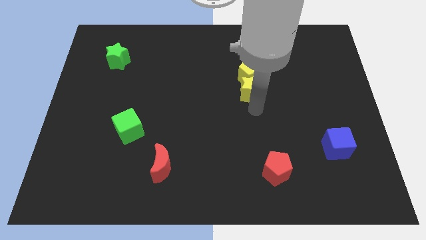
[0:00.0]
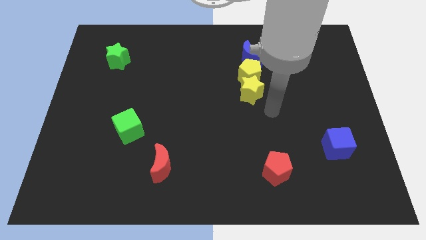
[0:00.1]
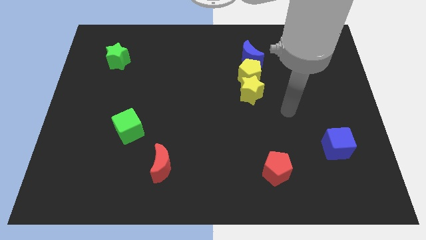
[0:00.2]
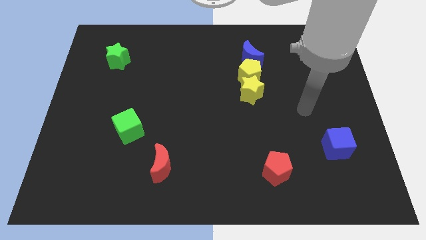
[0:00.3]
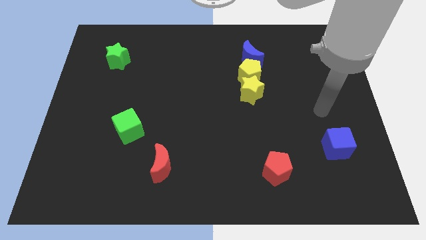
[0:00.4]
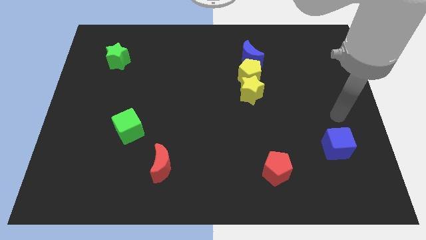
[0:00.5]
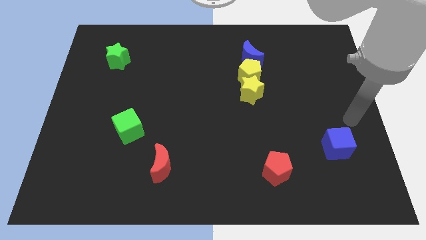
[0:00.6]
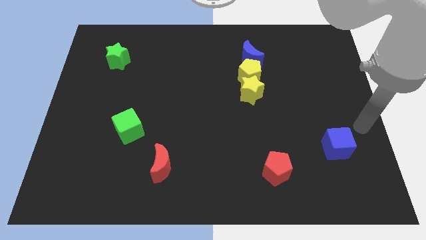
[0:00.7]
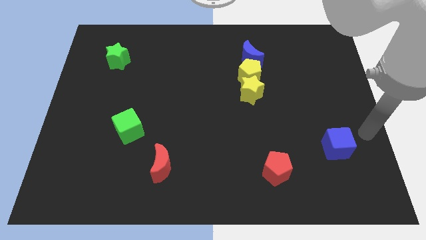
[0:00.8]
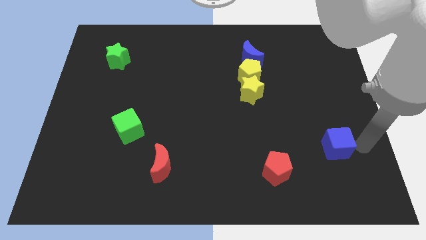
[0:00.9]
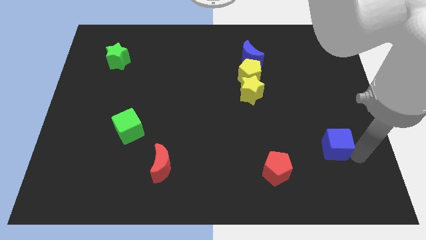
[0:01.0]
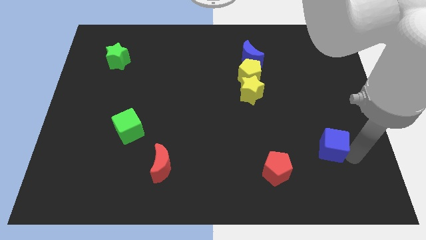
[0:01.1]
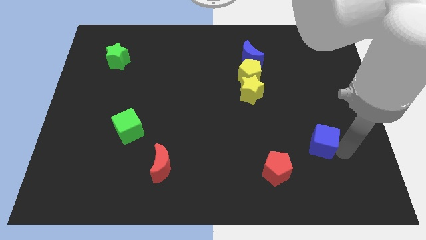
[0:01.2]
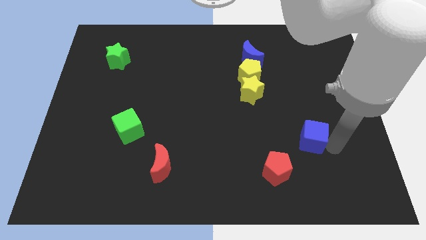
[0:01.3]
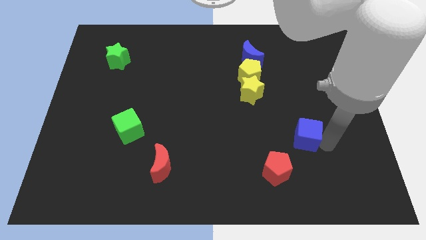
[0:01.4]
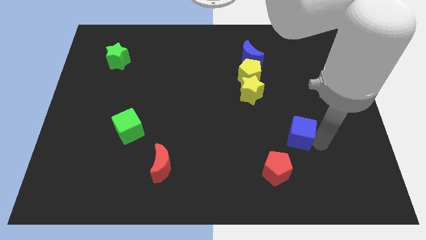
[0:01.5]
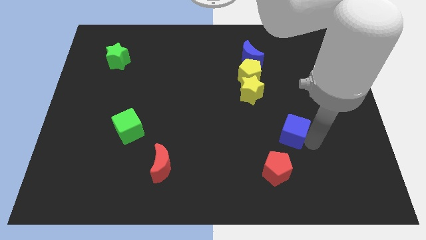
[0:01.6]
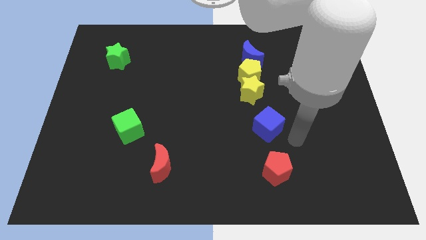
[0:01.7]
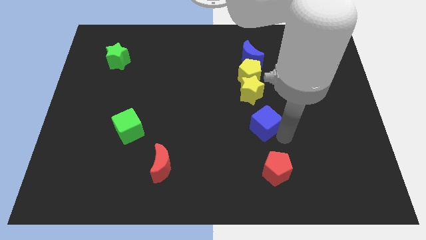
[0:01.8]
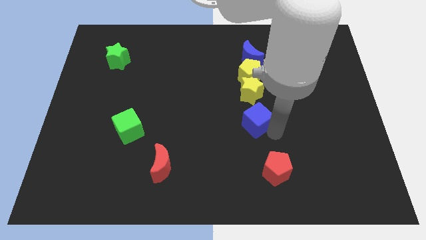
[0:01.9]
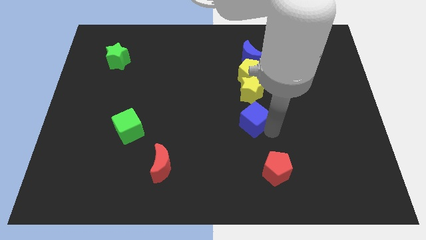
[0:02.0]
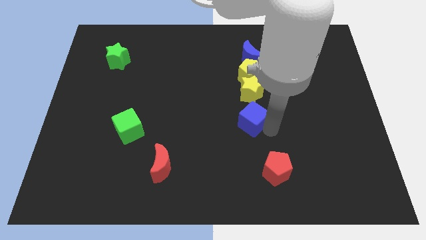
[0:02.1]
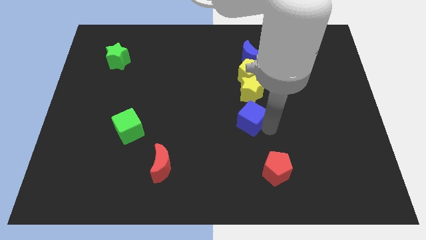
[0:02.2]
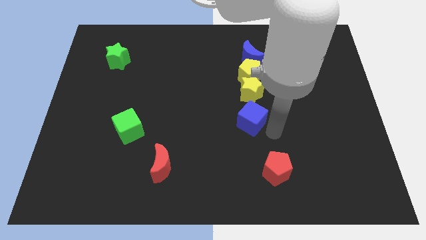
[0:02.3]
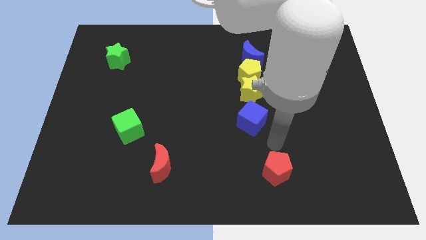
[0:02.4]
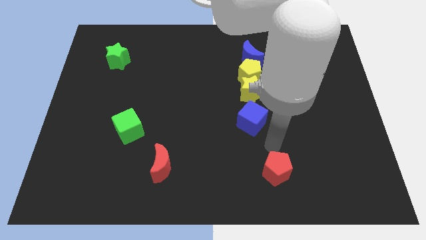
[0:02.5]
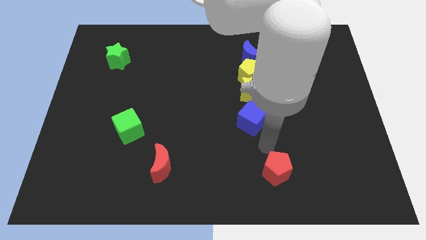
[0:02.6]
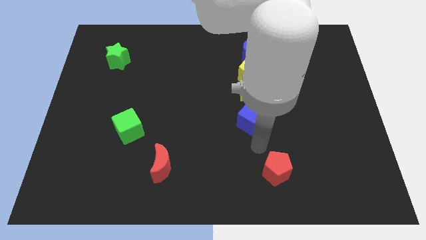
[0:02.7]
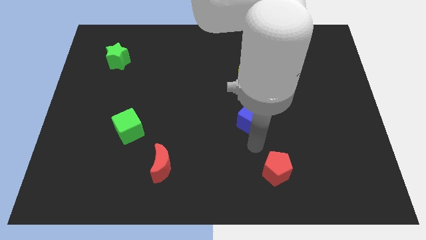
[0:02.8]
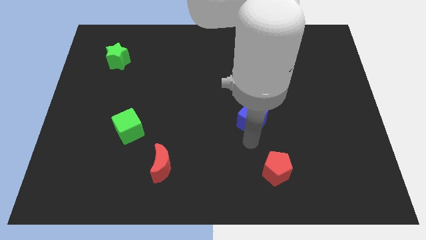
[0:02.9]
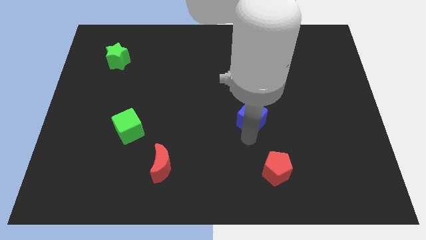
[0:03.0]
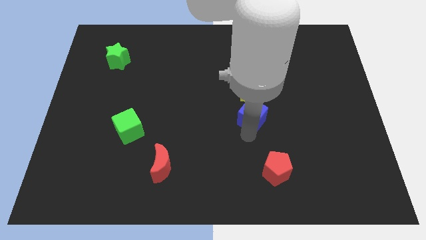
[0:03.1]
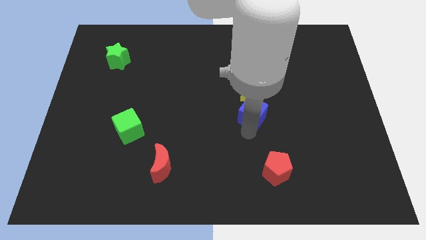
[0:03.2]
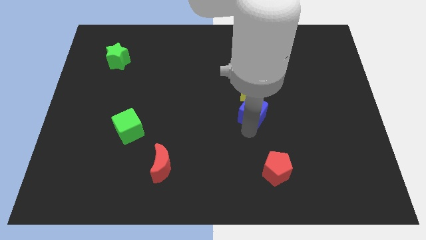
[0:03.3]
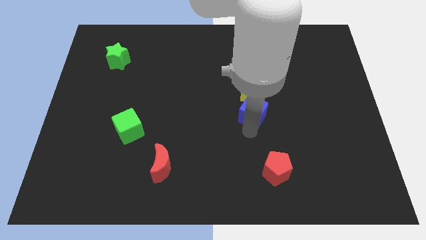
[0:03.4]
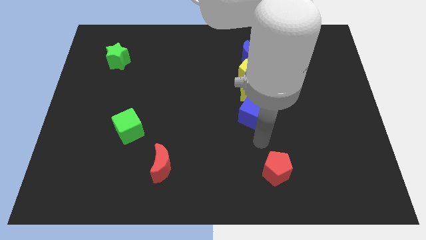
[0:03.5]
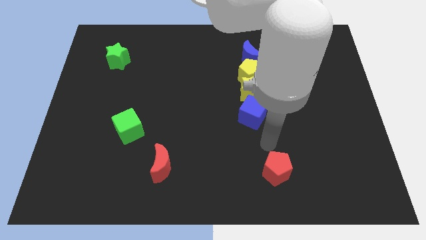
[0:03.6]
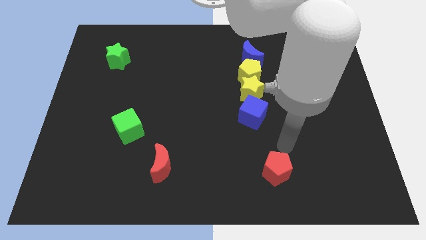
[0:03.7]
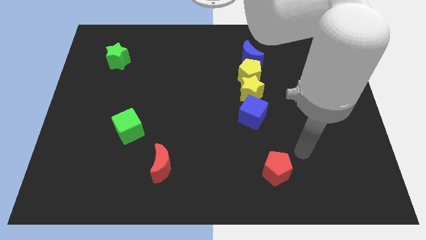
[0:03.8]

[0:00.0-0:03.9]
move blue cube horizontal to the yellow star

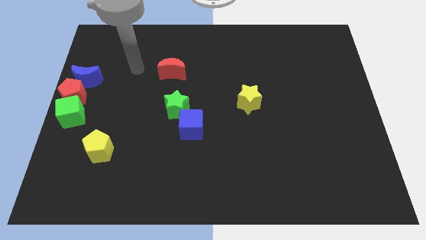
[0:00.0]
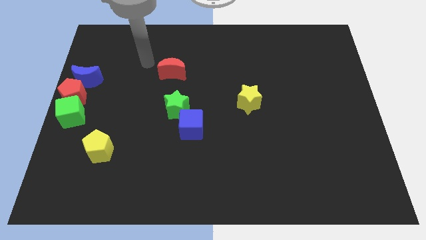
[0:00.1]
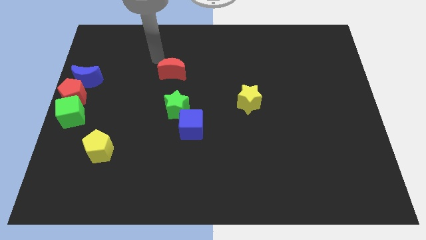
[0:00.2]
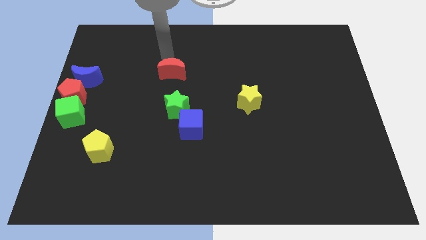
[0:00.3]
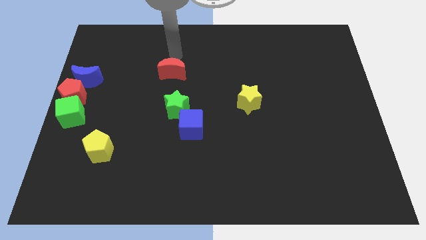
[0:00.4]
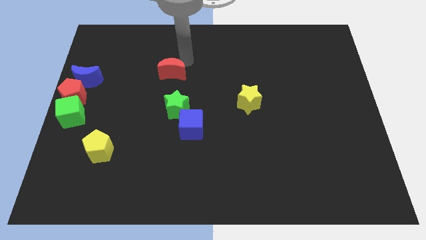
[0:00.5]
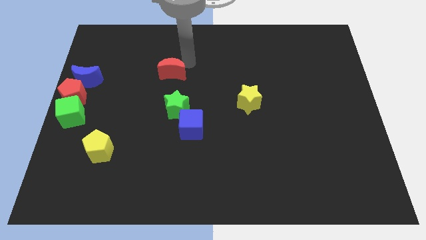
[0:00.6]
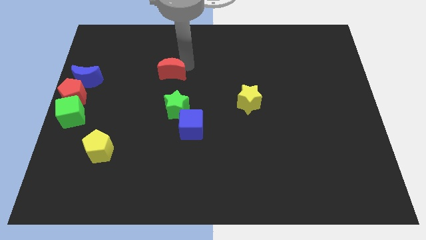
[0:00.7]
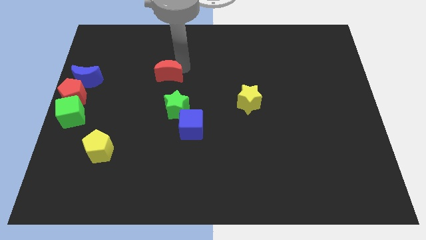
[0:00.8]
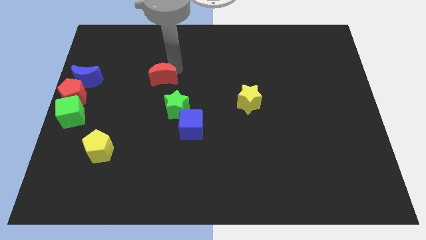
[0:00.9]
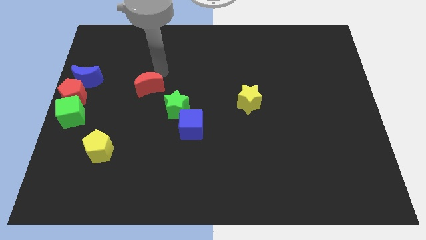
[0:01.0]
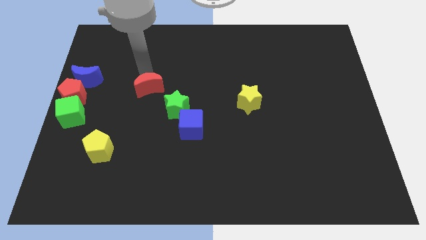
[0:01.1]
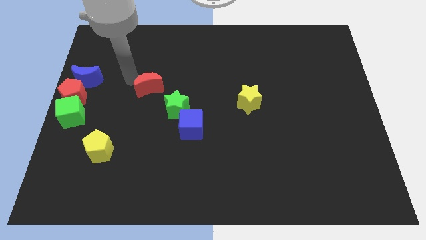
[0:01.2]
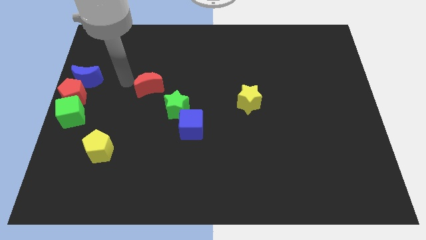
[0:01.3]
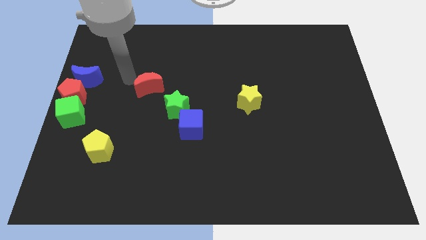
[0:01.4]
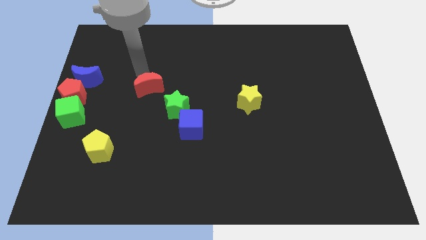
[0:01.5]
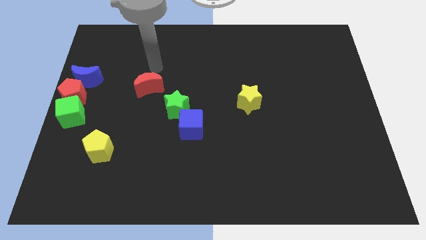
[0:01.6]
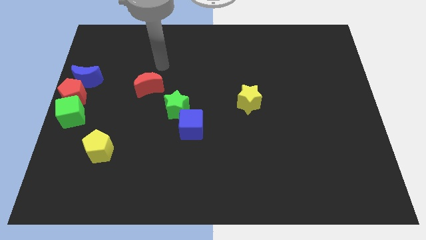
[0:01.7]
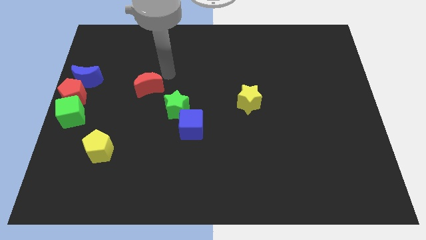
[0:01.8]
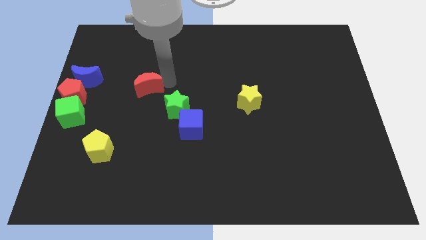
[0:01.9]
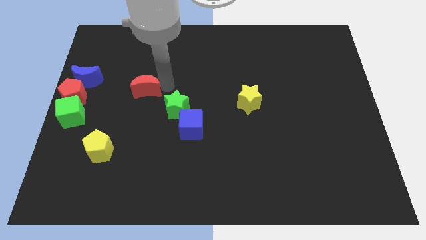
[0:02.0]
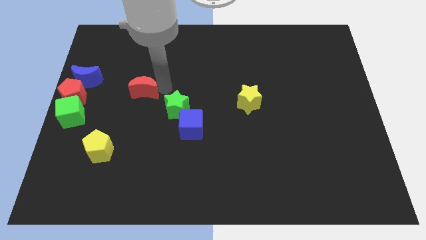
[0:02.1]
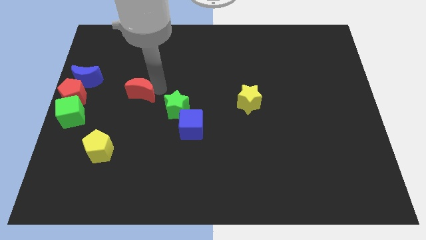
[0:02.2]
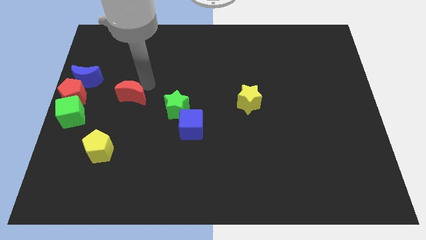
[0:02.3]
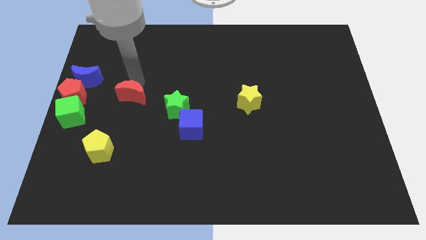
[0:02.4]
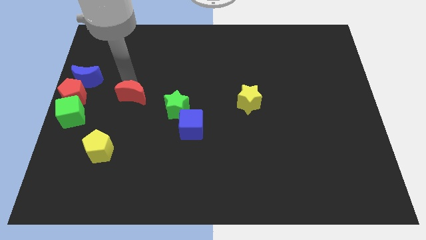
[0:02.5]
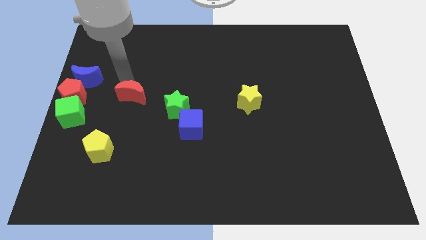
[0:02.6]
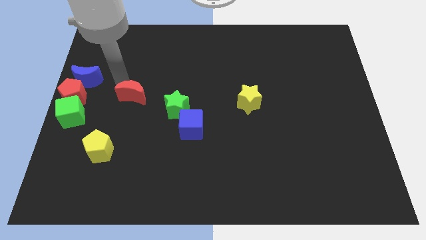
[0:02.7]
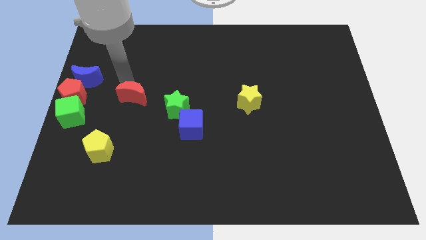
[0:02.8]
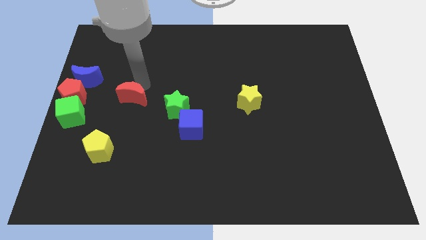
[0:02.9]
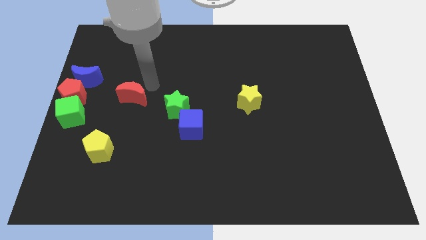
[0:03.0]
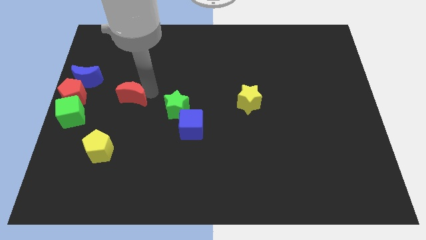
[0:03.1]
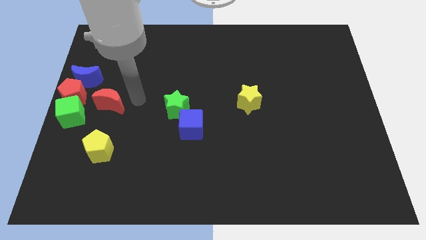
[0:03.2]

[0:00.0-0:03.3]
slide the red crescent to the right side of the red pentagon

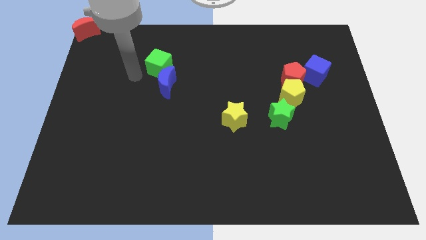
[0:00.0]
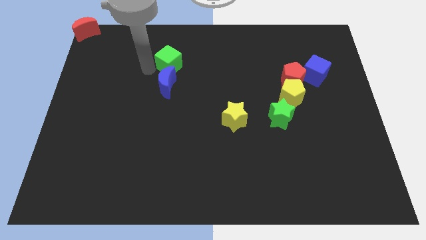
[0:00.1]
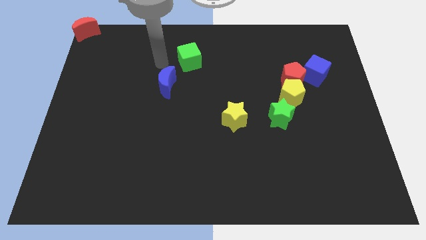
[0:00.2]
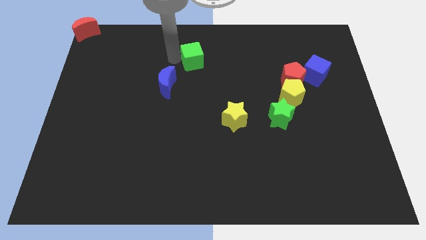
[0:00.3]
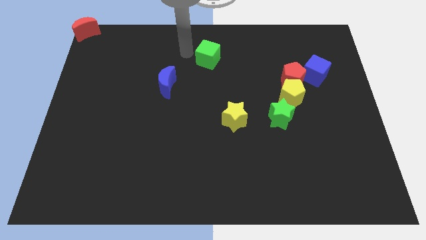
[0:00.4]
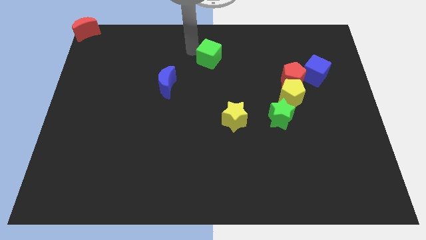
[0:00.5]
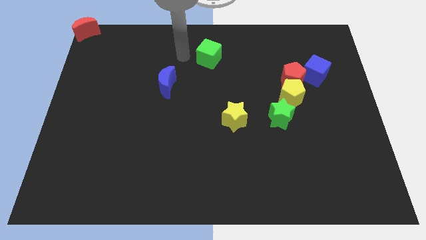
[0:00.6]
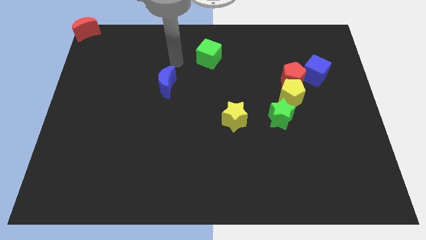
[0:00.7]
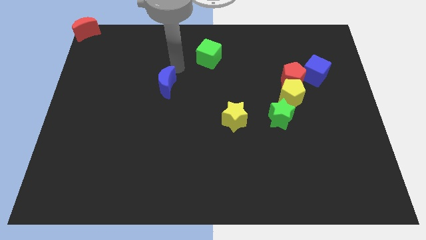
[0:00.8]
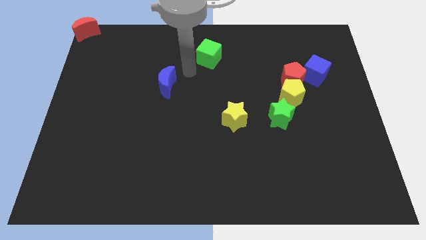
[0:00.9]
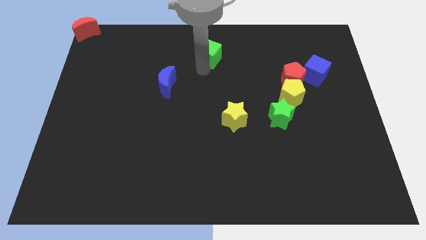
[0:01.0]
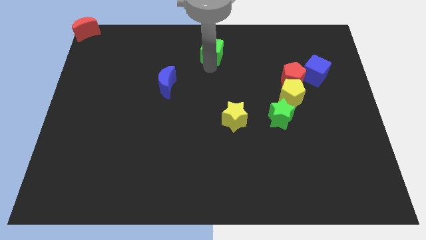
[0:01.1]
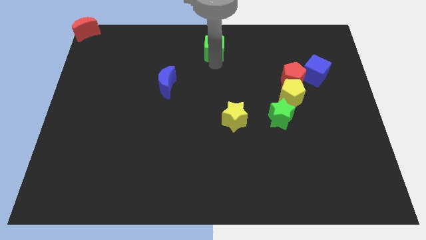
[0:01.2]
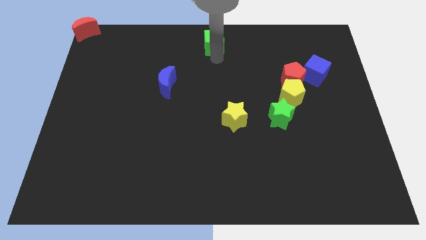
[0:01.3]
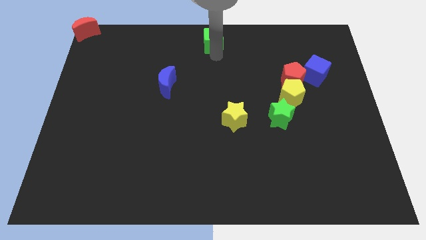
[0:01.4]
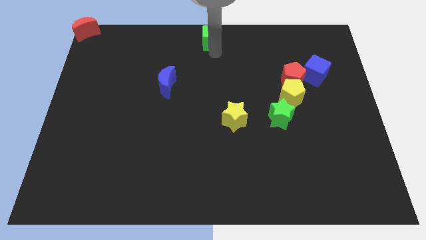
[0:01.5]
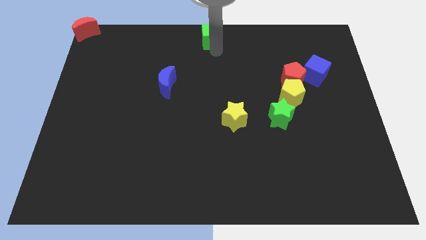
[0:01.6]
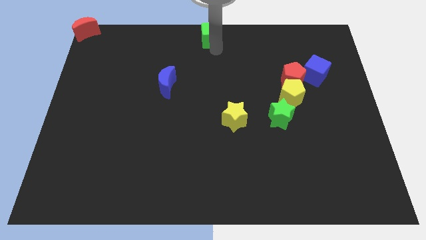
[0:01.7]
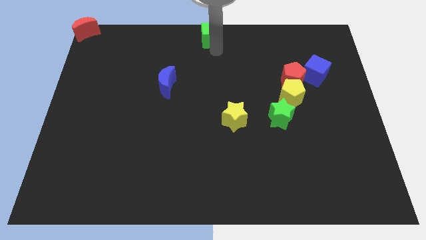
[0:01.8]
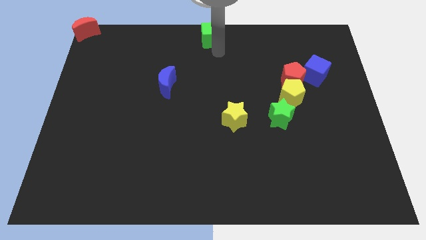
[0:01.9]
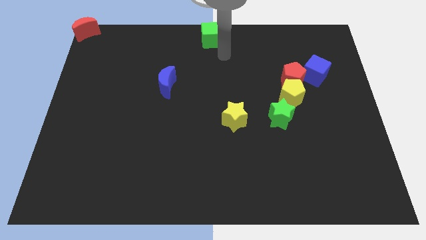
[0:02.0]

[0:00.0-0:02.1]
place the blue cube at the top center
